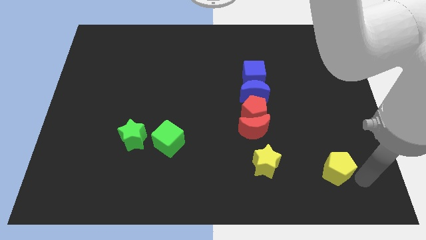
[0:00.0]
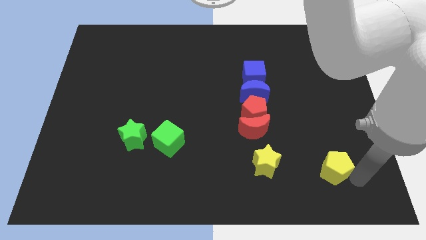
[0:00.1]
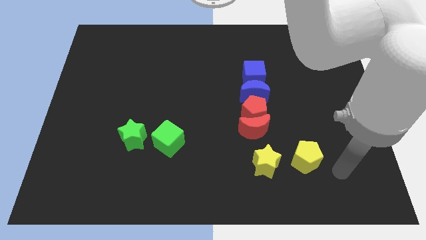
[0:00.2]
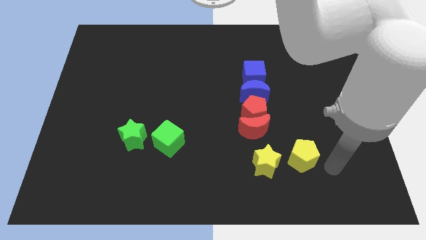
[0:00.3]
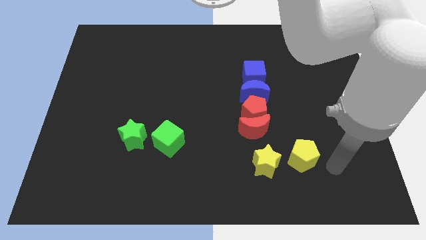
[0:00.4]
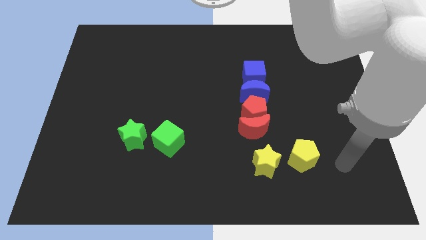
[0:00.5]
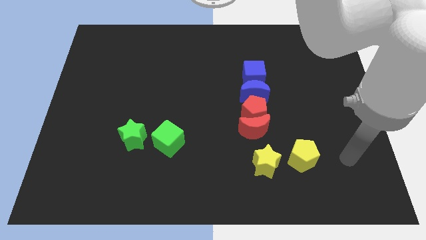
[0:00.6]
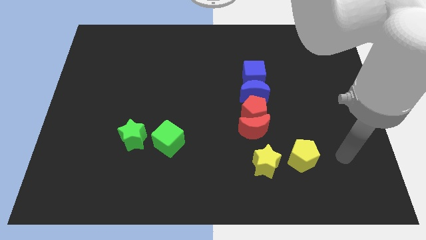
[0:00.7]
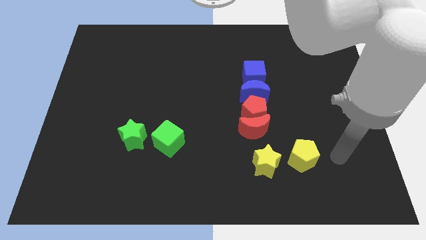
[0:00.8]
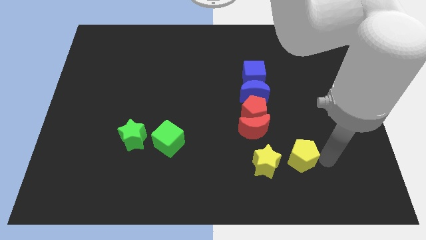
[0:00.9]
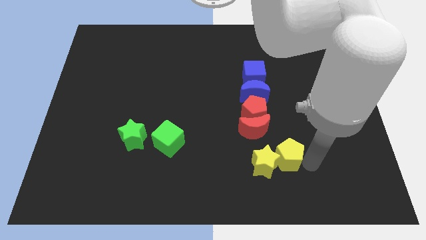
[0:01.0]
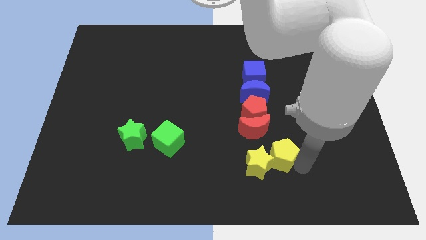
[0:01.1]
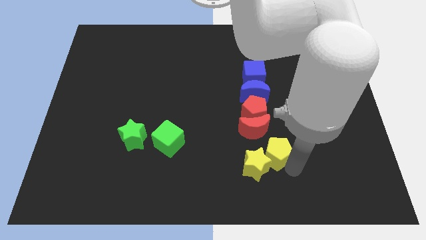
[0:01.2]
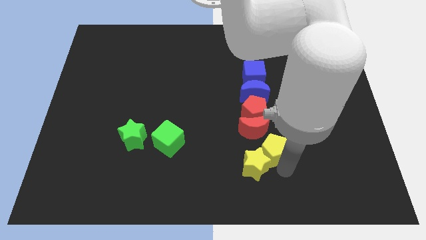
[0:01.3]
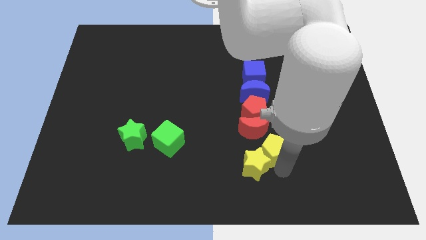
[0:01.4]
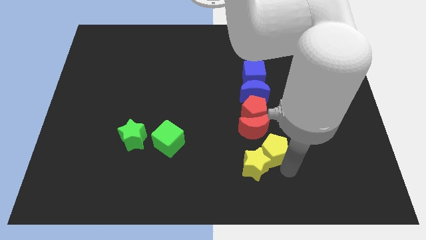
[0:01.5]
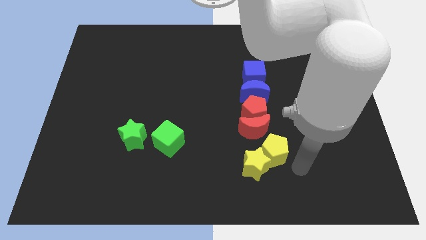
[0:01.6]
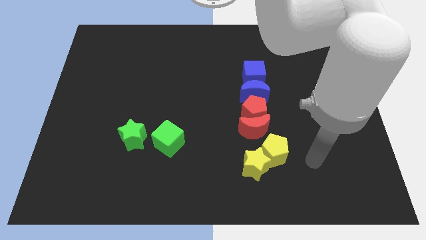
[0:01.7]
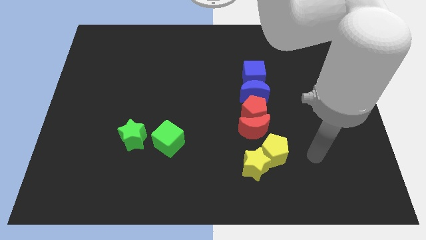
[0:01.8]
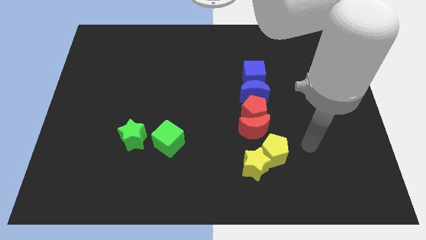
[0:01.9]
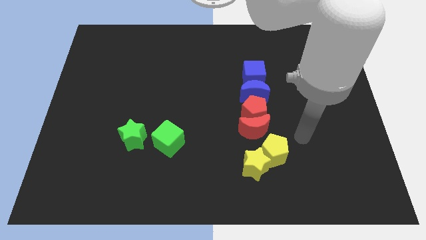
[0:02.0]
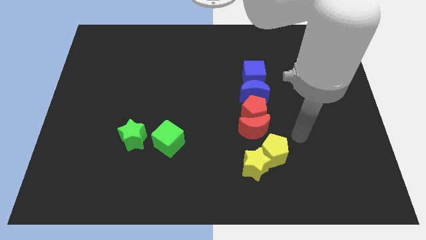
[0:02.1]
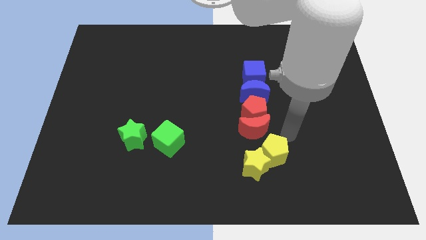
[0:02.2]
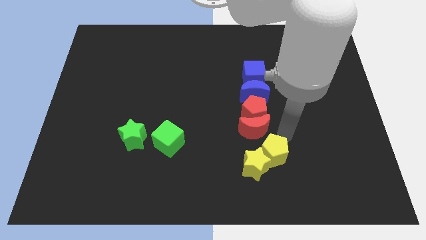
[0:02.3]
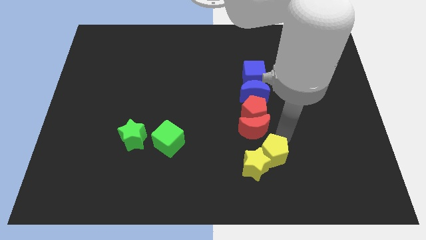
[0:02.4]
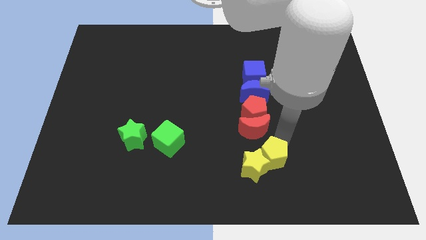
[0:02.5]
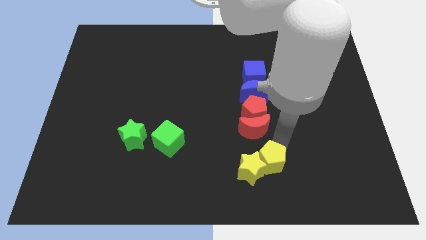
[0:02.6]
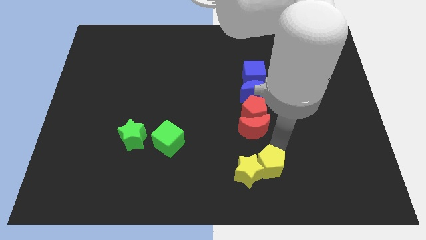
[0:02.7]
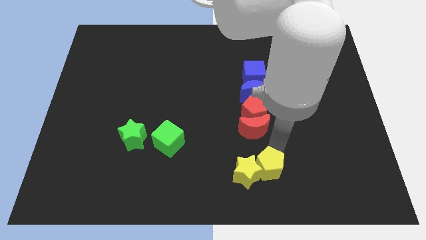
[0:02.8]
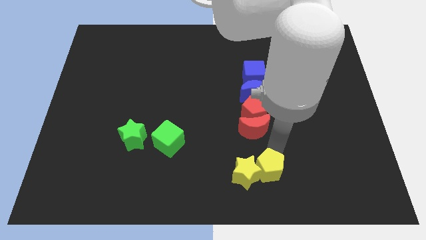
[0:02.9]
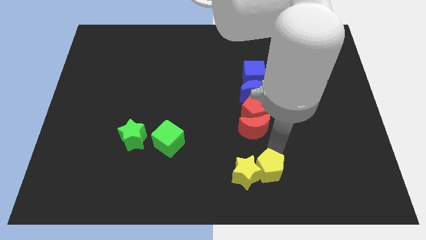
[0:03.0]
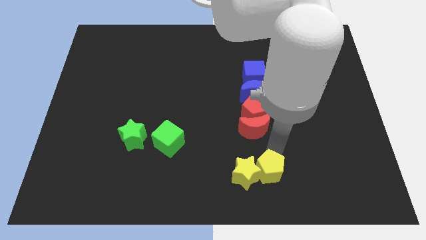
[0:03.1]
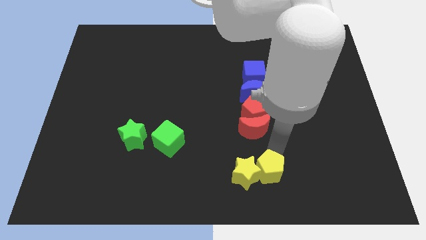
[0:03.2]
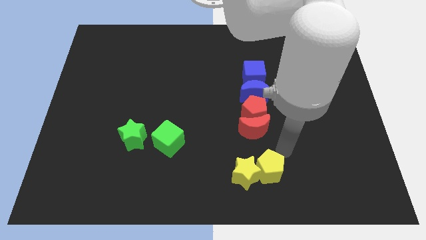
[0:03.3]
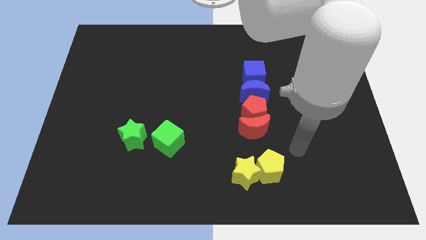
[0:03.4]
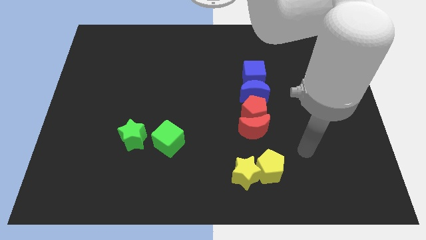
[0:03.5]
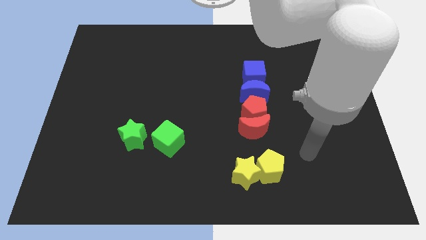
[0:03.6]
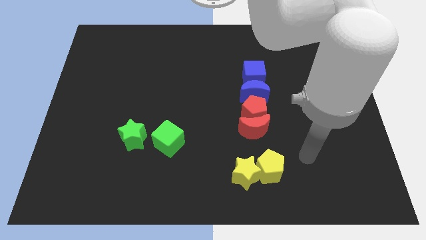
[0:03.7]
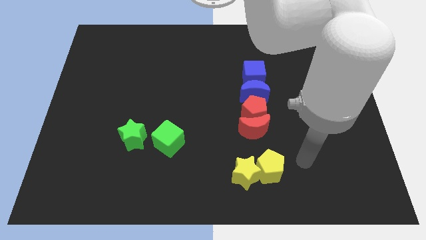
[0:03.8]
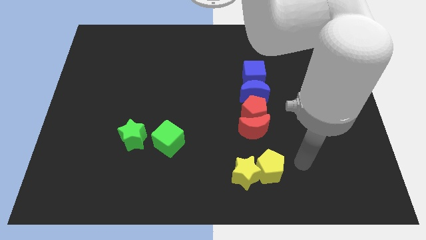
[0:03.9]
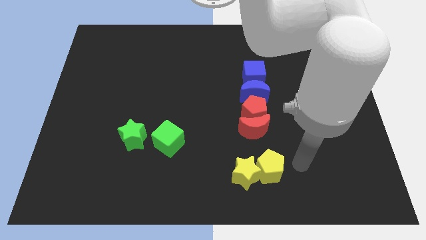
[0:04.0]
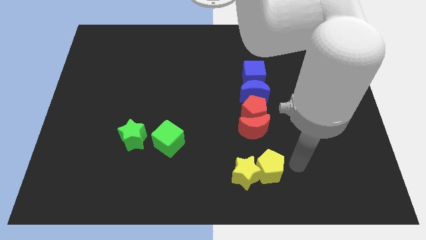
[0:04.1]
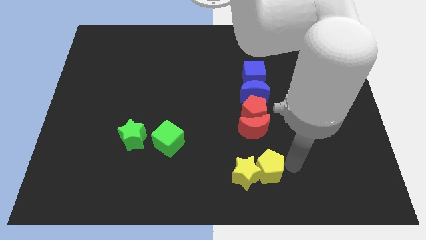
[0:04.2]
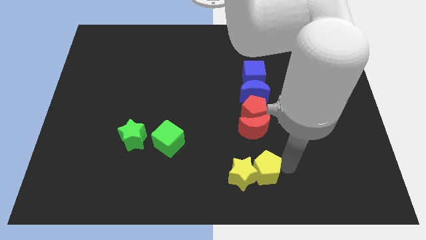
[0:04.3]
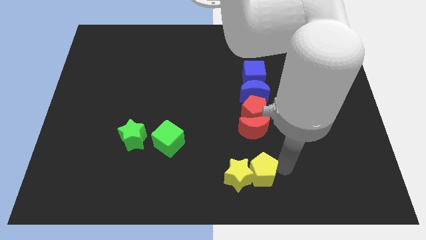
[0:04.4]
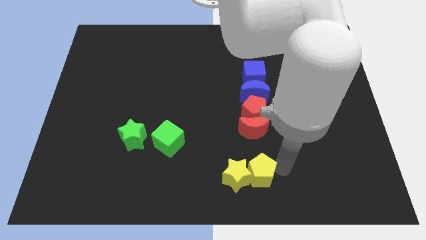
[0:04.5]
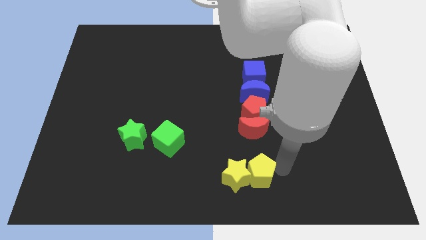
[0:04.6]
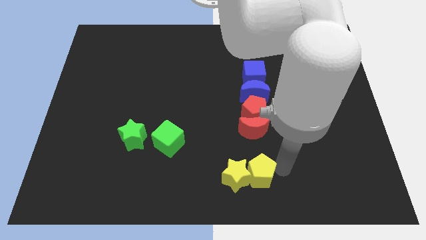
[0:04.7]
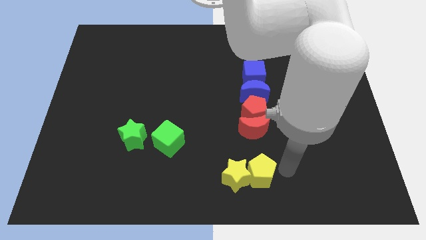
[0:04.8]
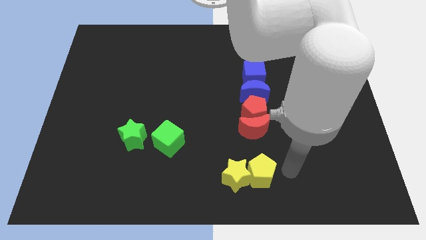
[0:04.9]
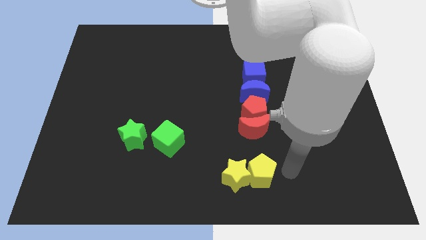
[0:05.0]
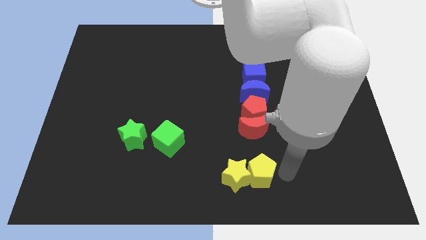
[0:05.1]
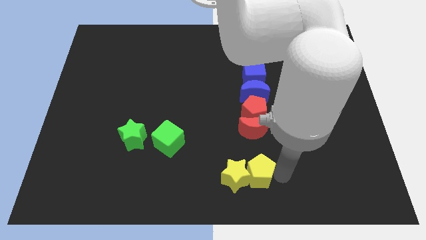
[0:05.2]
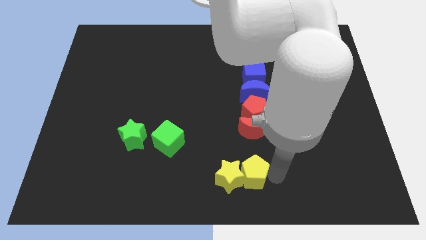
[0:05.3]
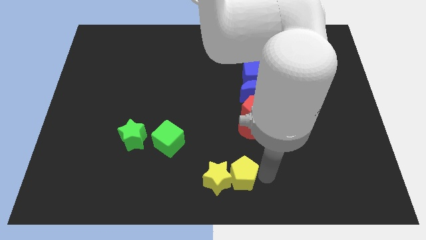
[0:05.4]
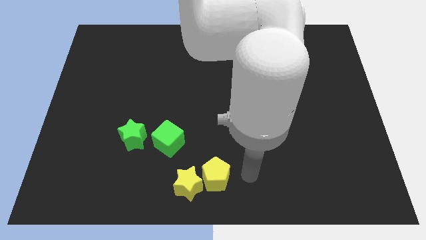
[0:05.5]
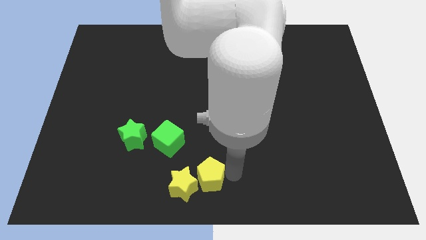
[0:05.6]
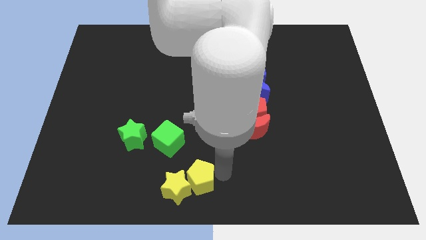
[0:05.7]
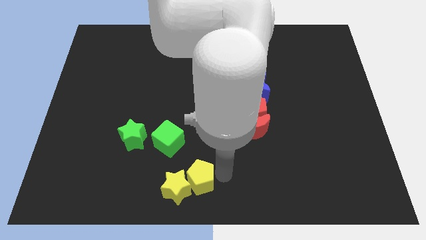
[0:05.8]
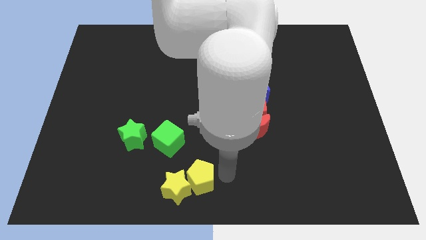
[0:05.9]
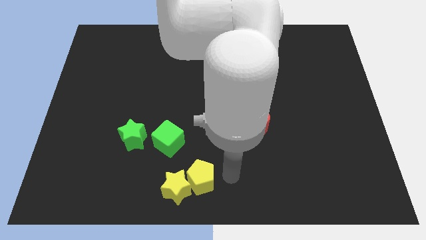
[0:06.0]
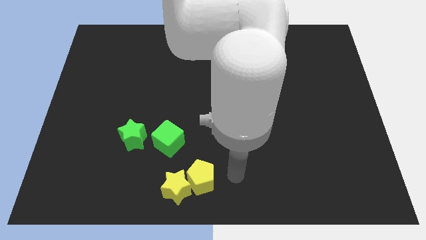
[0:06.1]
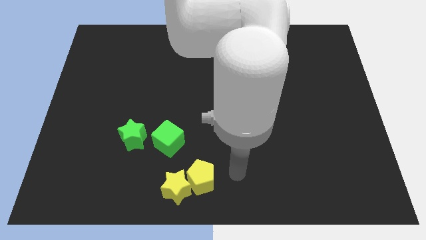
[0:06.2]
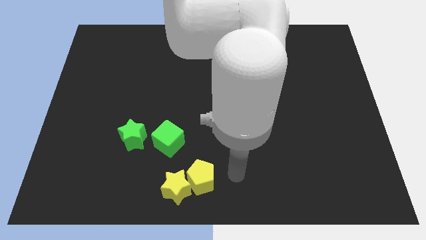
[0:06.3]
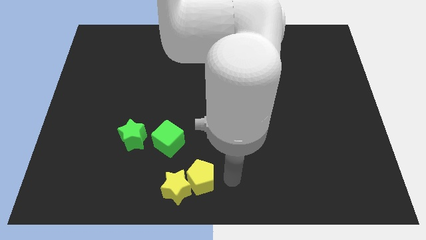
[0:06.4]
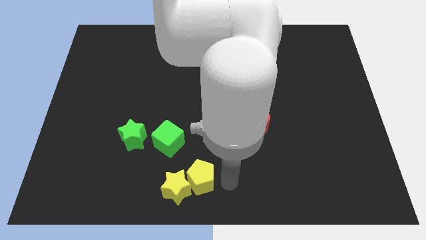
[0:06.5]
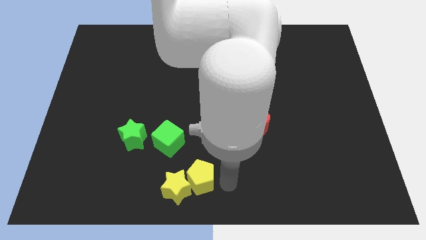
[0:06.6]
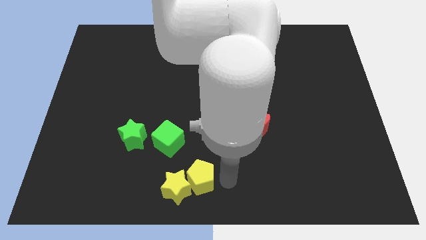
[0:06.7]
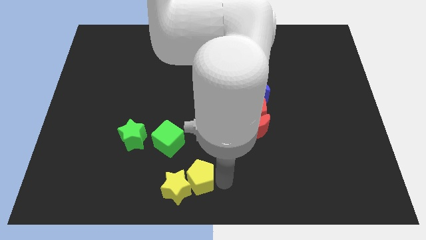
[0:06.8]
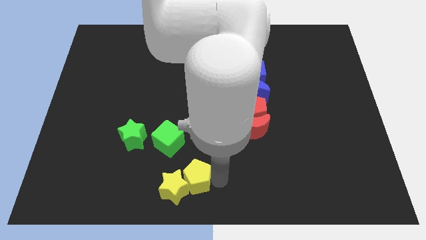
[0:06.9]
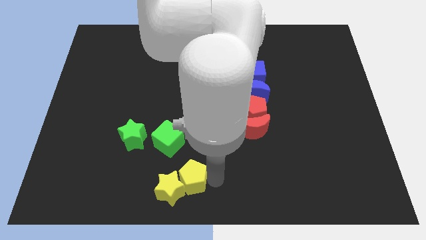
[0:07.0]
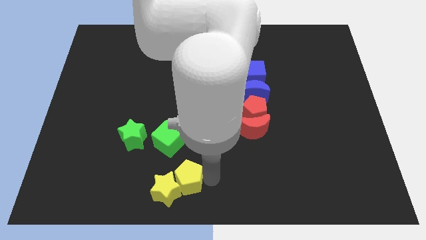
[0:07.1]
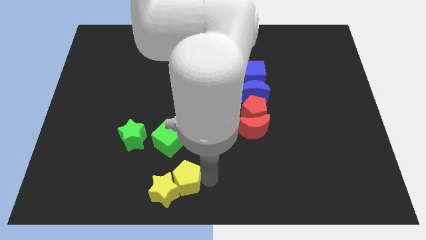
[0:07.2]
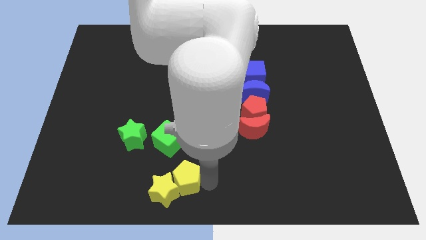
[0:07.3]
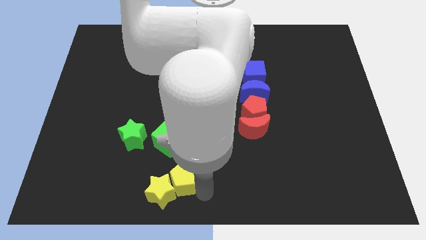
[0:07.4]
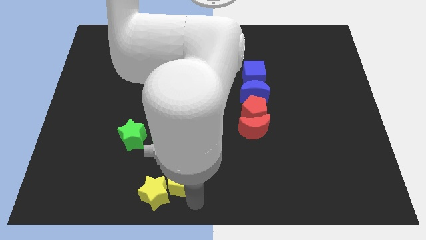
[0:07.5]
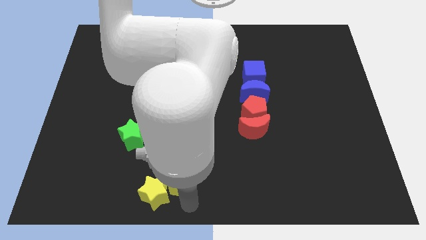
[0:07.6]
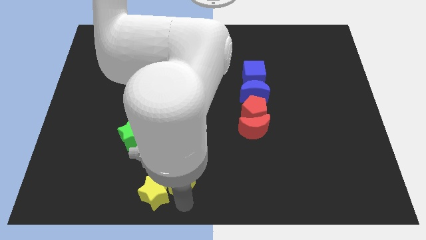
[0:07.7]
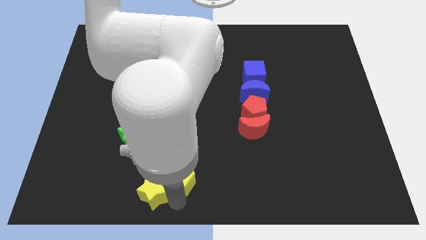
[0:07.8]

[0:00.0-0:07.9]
push the yellow pentagon into the yellow star

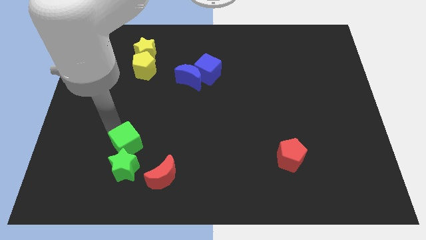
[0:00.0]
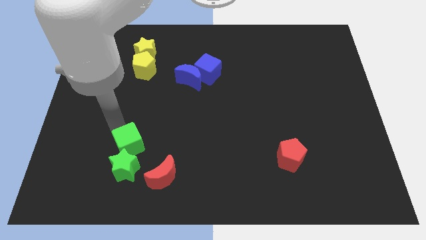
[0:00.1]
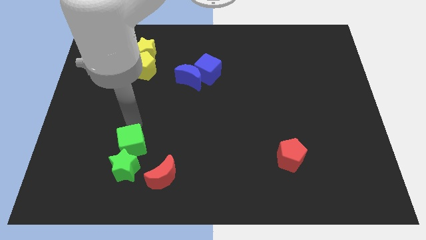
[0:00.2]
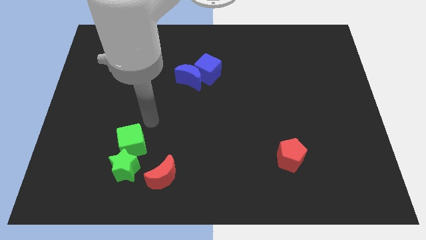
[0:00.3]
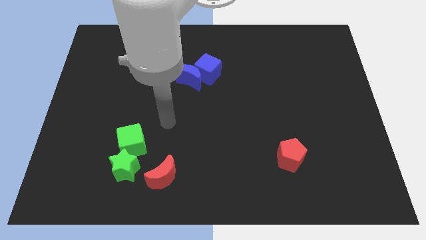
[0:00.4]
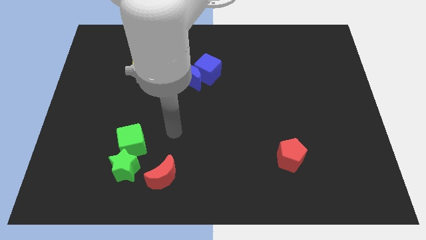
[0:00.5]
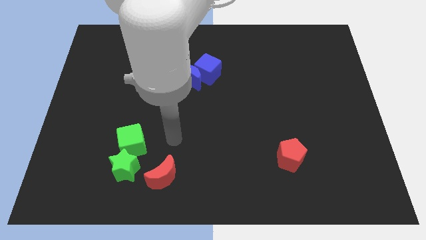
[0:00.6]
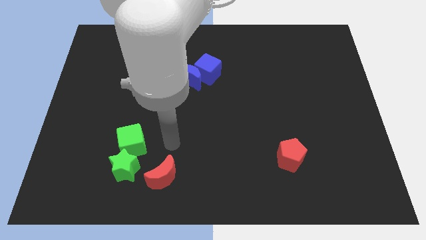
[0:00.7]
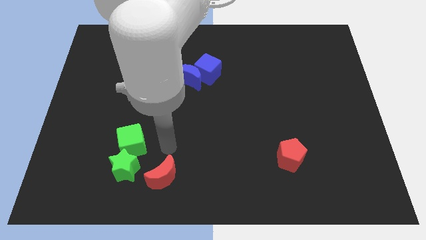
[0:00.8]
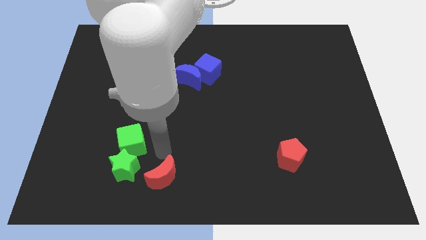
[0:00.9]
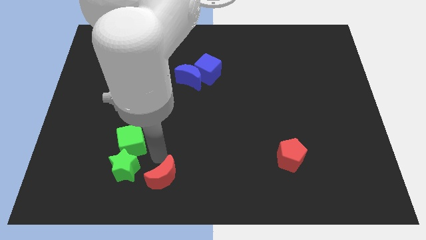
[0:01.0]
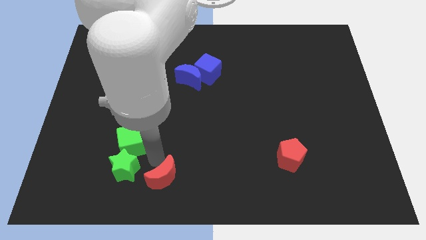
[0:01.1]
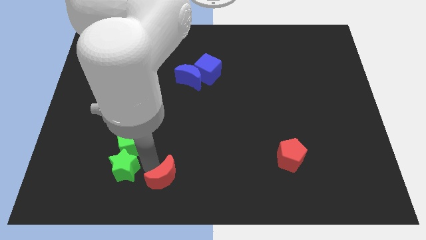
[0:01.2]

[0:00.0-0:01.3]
place the pointer to the right of green star
